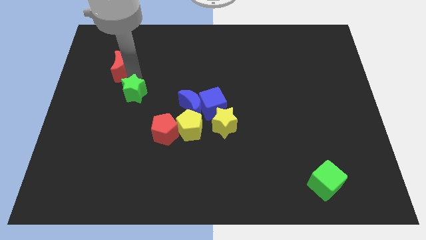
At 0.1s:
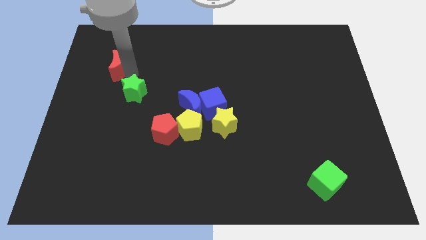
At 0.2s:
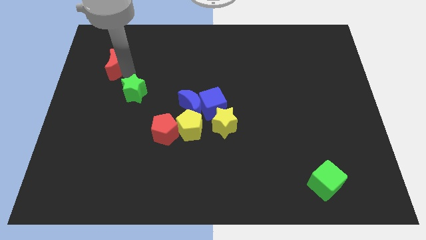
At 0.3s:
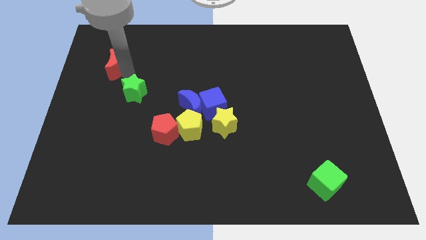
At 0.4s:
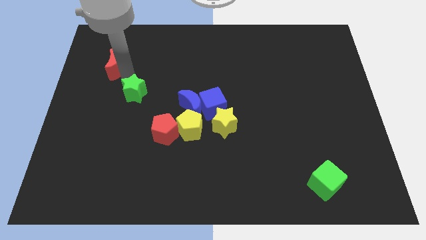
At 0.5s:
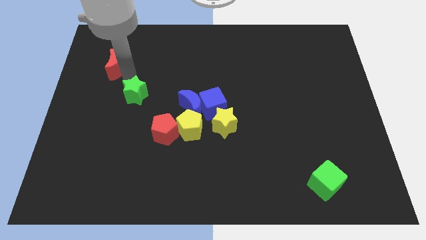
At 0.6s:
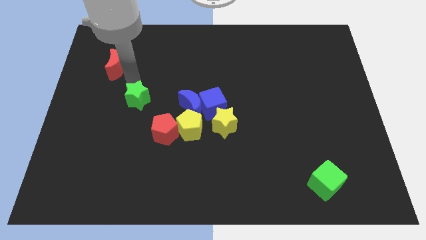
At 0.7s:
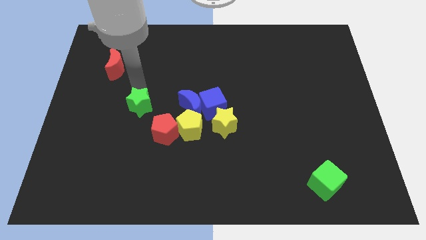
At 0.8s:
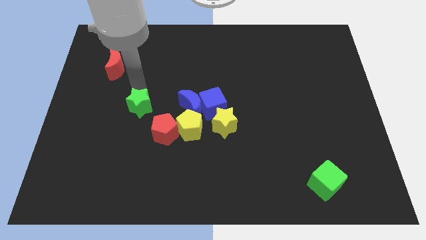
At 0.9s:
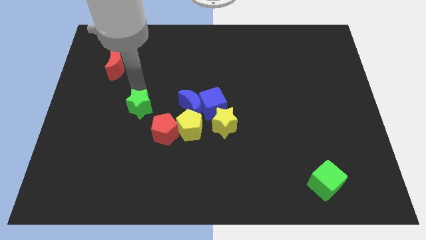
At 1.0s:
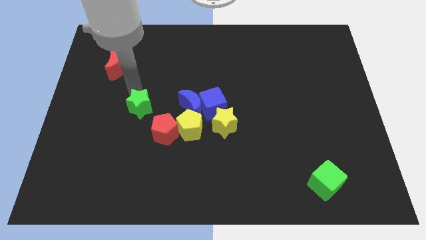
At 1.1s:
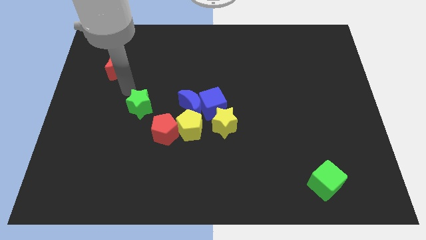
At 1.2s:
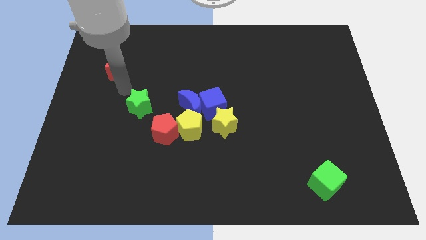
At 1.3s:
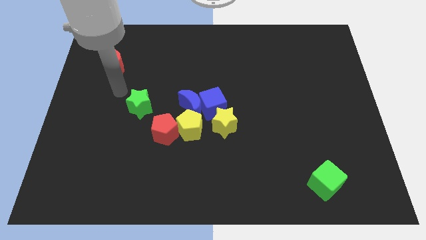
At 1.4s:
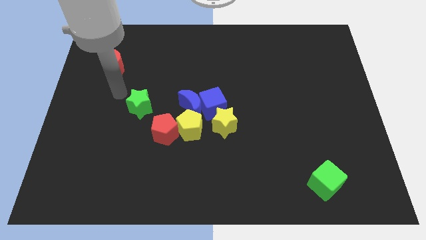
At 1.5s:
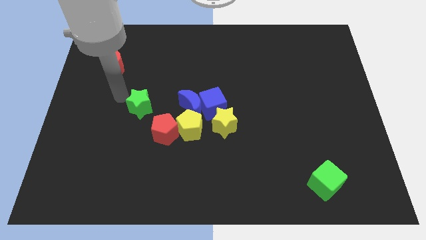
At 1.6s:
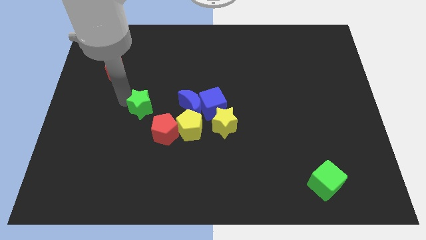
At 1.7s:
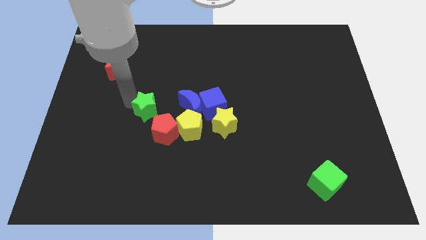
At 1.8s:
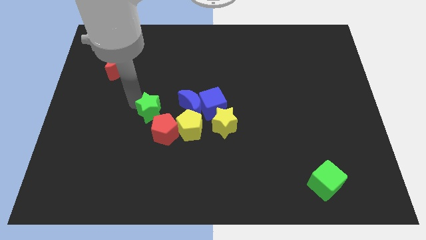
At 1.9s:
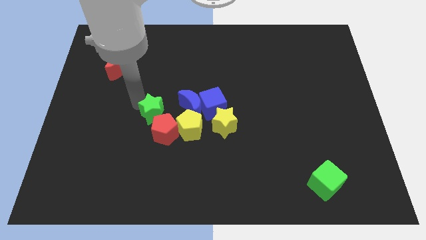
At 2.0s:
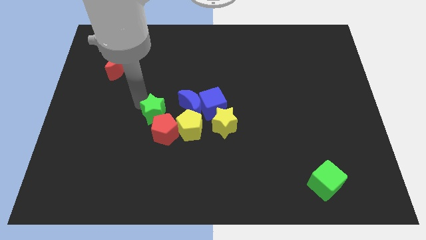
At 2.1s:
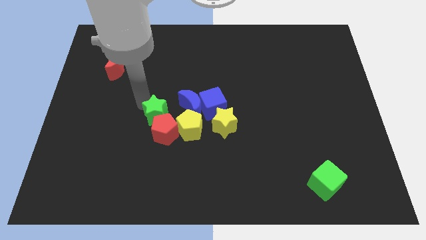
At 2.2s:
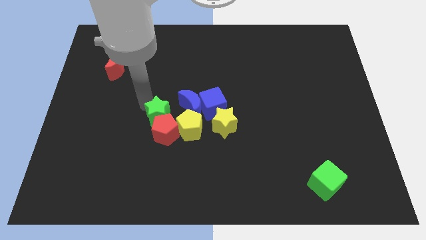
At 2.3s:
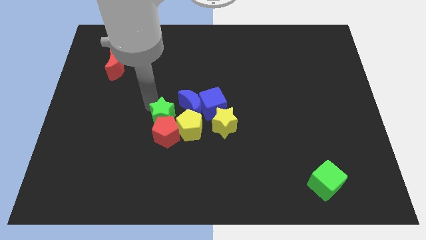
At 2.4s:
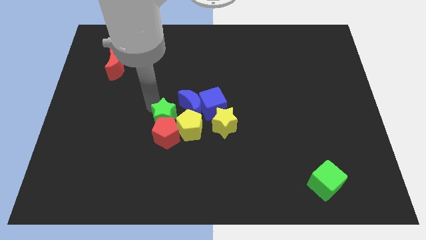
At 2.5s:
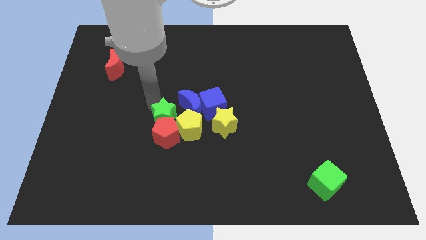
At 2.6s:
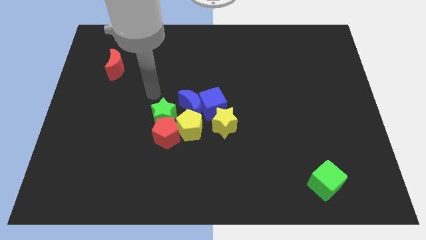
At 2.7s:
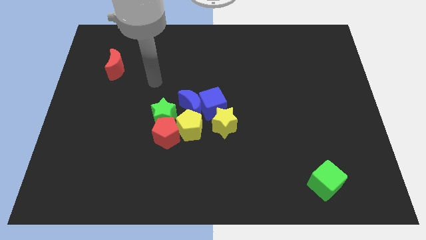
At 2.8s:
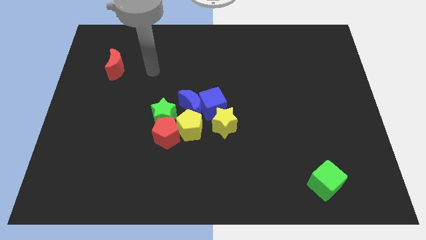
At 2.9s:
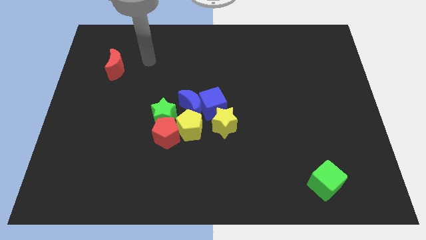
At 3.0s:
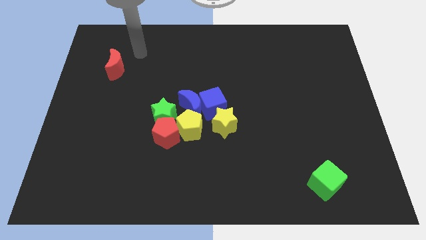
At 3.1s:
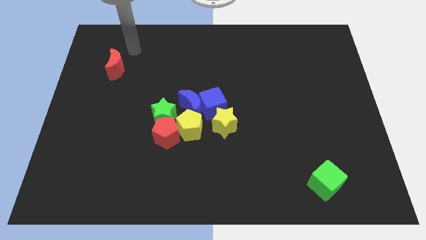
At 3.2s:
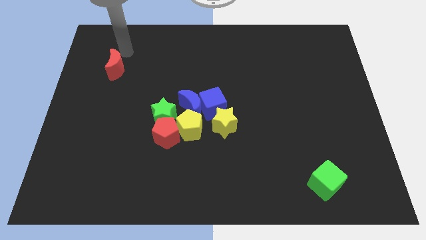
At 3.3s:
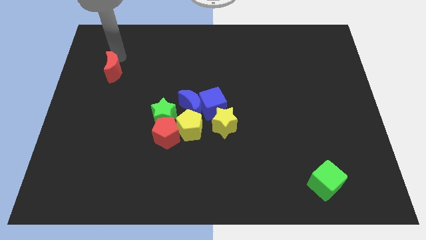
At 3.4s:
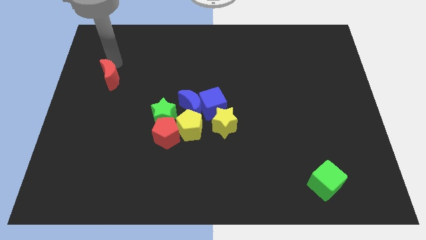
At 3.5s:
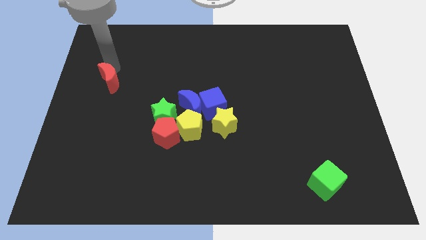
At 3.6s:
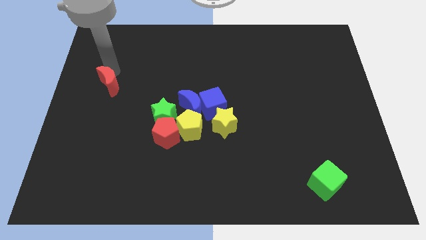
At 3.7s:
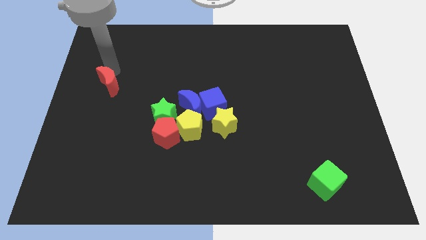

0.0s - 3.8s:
slide the green star into the red pentagon

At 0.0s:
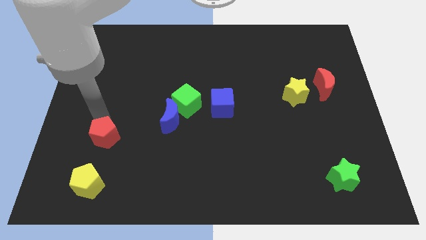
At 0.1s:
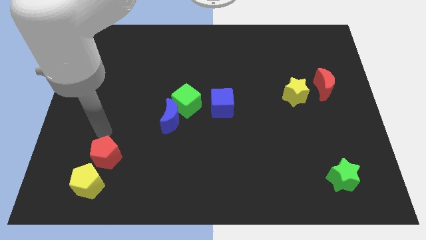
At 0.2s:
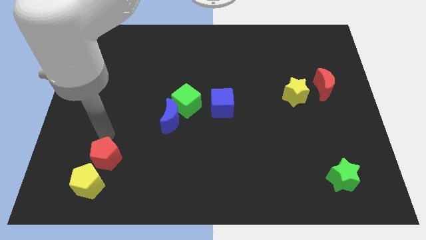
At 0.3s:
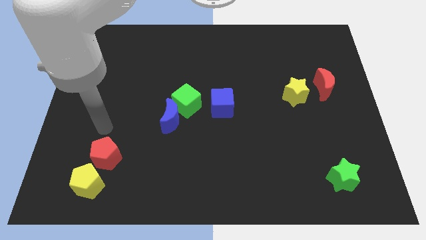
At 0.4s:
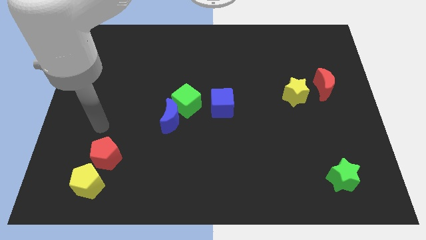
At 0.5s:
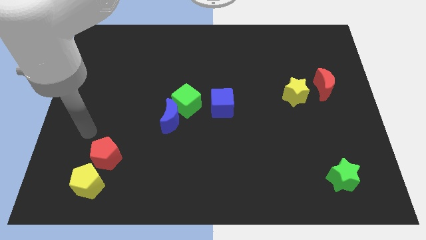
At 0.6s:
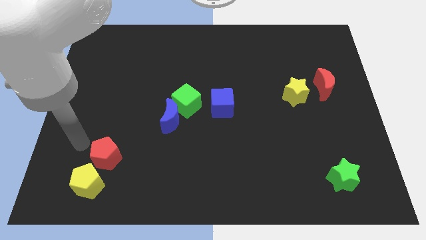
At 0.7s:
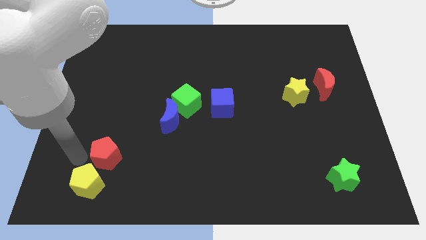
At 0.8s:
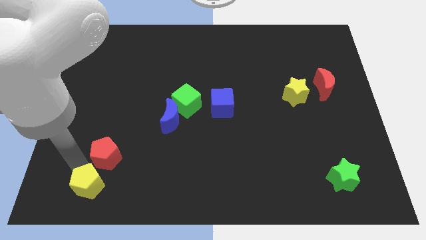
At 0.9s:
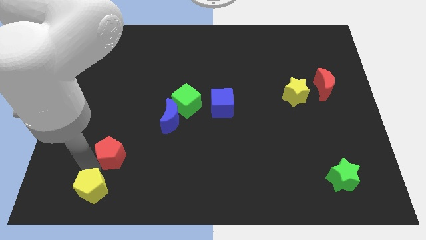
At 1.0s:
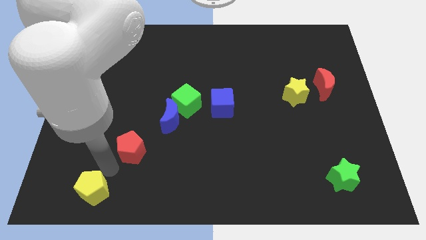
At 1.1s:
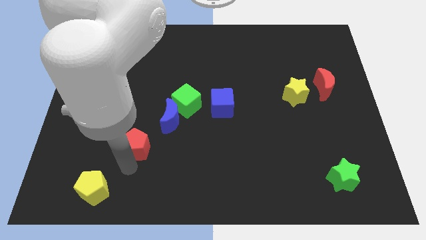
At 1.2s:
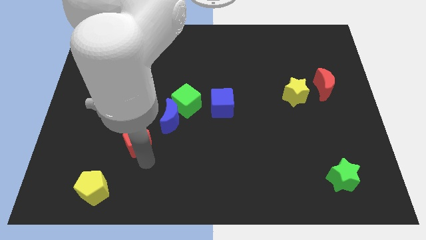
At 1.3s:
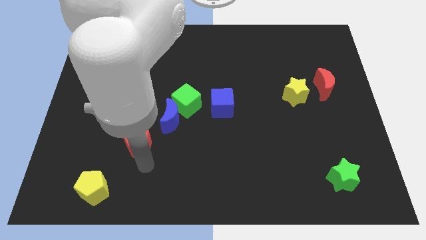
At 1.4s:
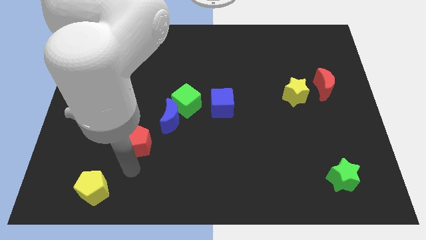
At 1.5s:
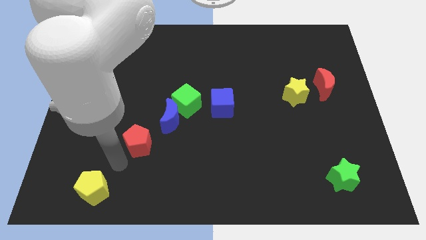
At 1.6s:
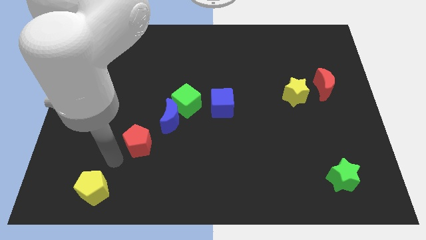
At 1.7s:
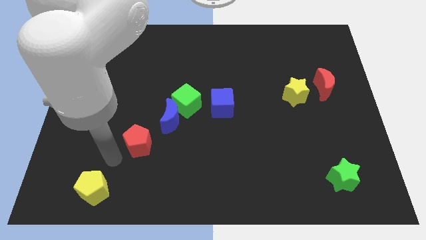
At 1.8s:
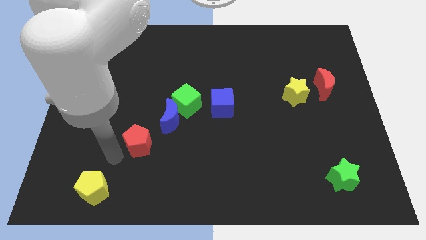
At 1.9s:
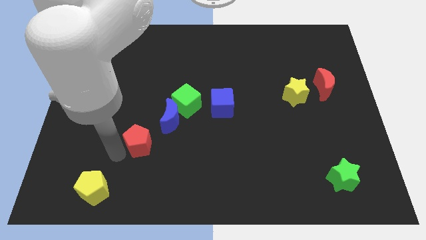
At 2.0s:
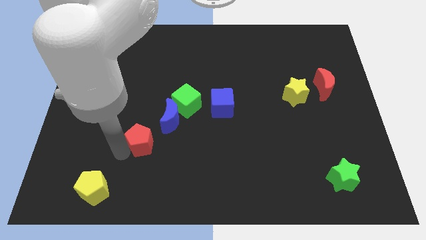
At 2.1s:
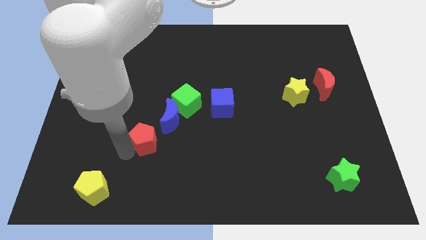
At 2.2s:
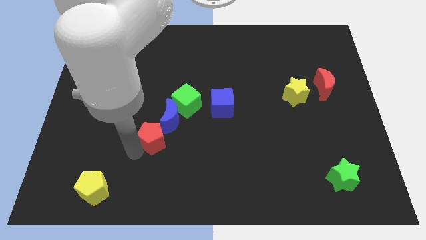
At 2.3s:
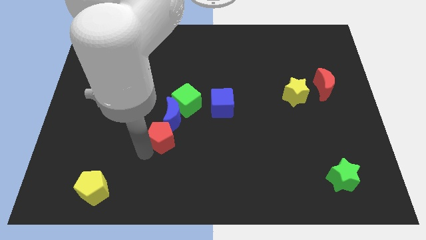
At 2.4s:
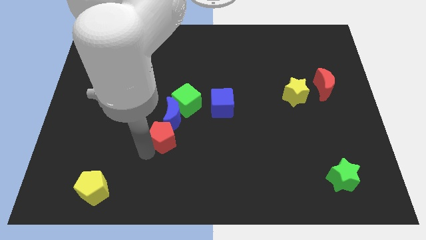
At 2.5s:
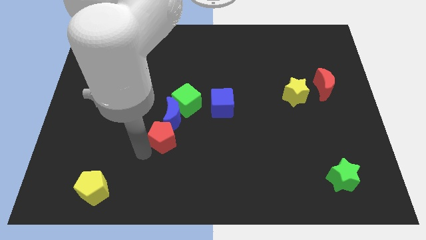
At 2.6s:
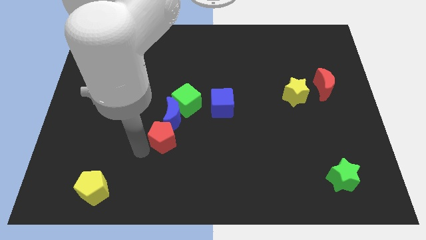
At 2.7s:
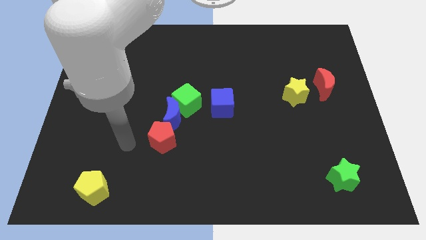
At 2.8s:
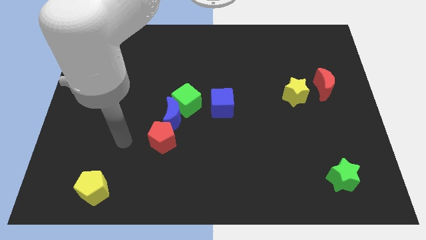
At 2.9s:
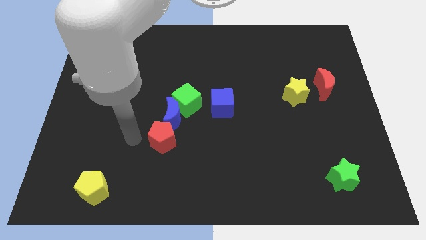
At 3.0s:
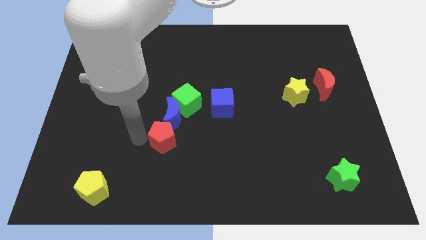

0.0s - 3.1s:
slide red pentagon into blue moon

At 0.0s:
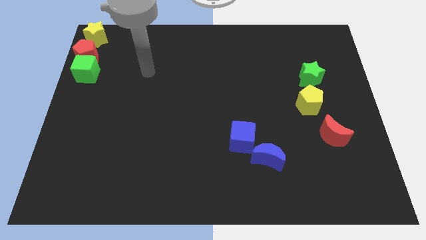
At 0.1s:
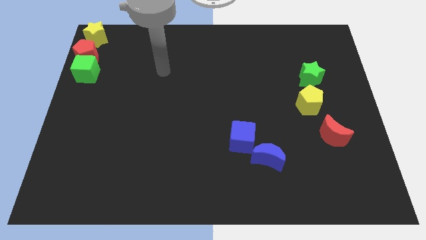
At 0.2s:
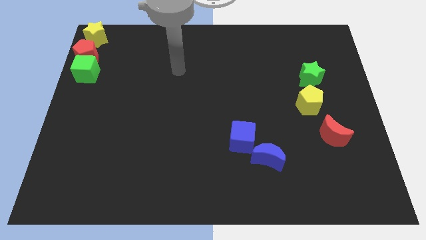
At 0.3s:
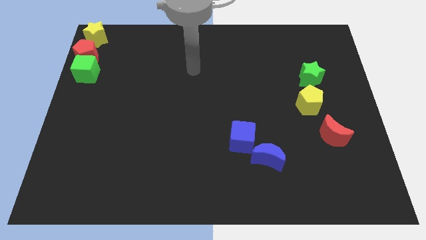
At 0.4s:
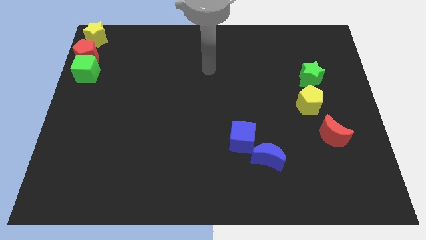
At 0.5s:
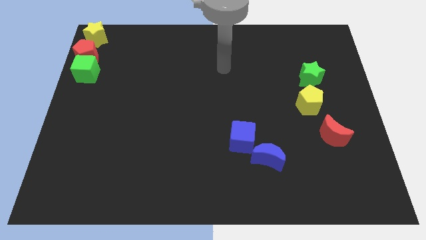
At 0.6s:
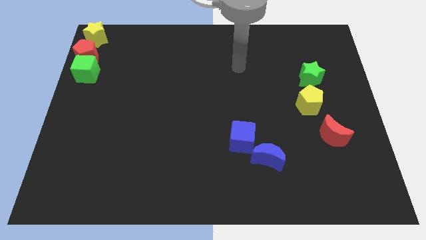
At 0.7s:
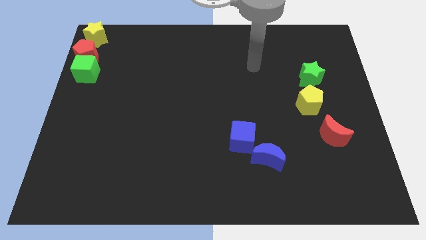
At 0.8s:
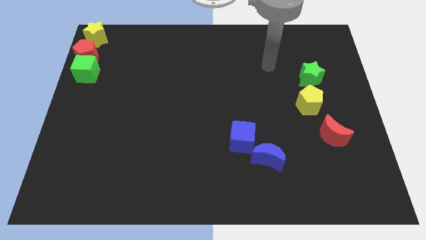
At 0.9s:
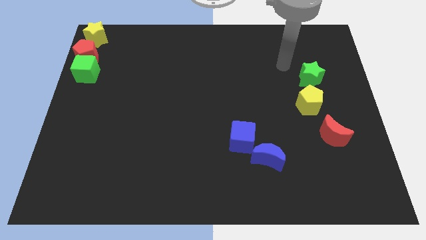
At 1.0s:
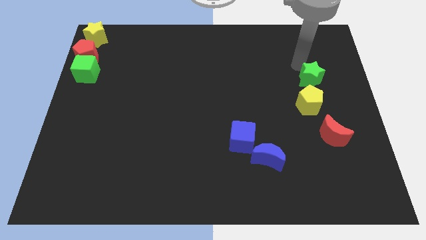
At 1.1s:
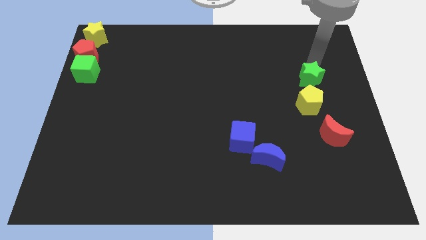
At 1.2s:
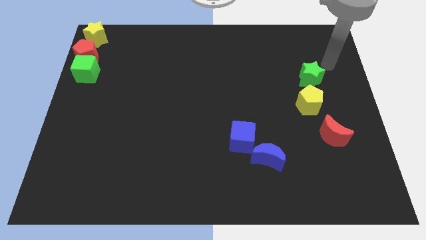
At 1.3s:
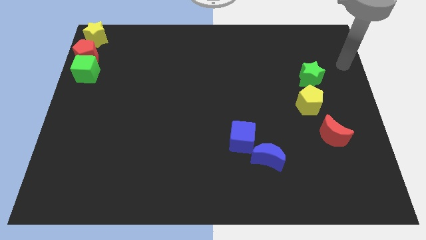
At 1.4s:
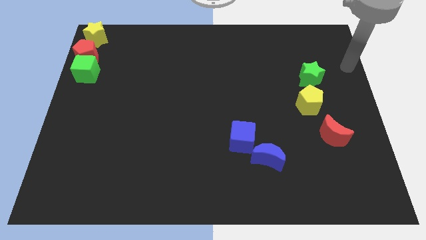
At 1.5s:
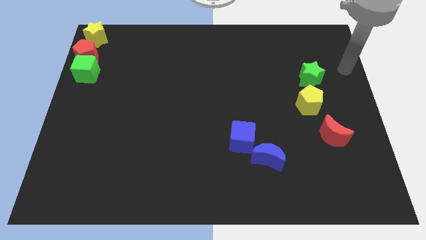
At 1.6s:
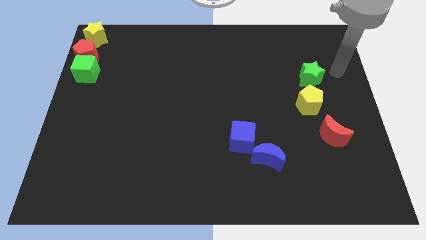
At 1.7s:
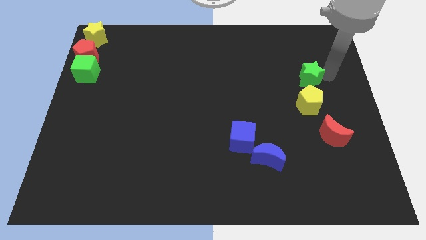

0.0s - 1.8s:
point your arm at the right of the green star

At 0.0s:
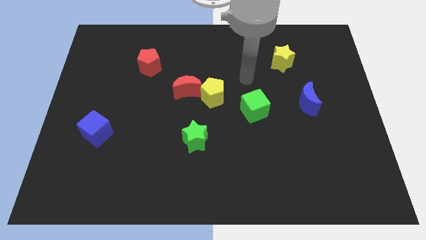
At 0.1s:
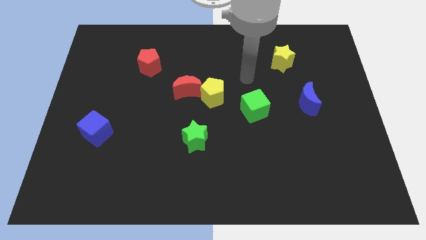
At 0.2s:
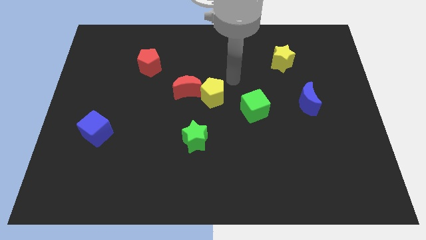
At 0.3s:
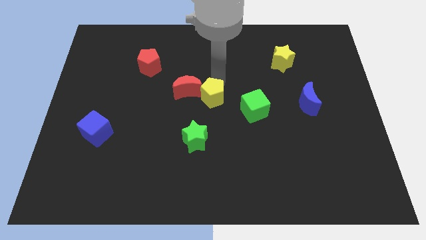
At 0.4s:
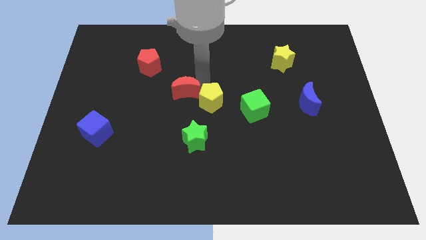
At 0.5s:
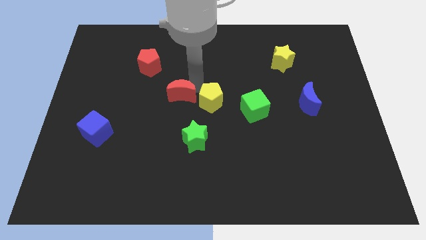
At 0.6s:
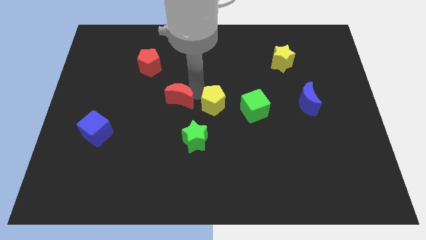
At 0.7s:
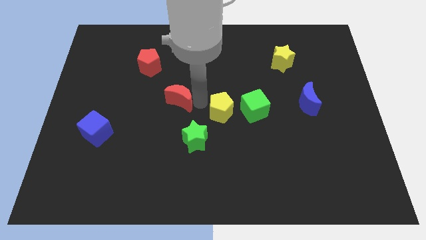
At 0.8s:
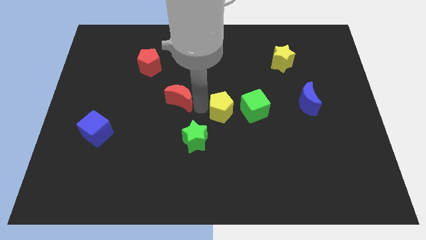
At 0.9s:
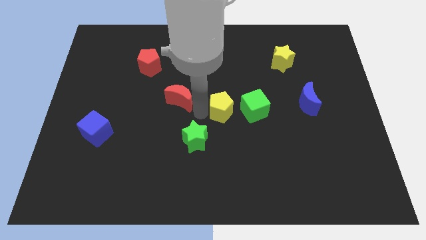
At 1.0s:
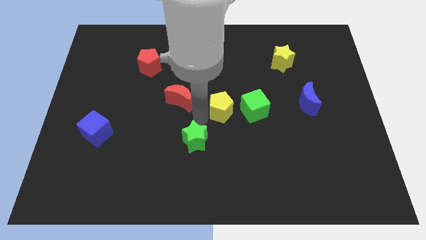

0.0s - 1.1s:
separate the red crescent and the yellow pentagon
